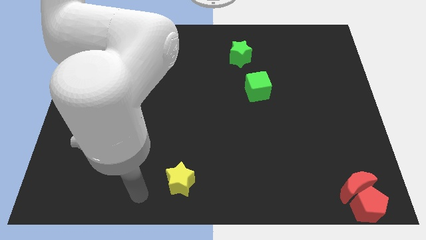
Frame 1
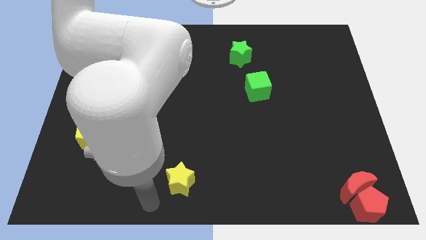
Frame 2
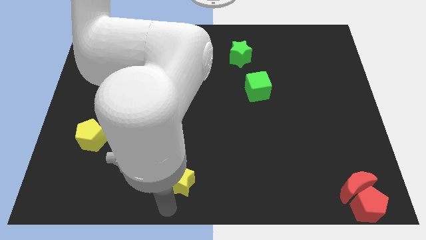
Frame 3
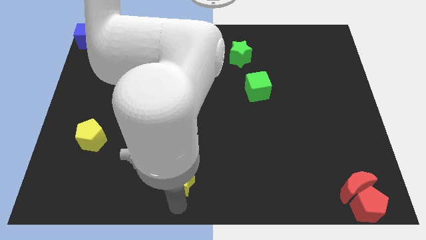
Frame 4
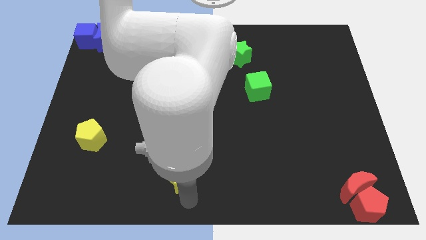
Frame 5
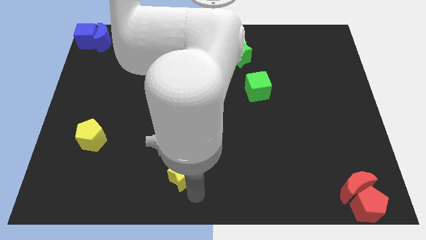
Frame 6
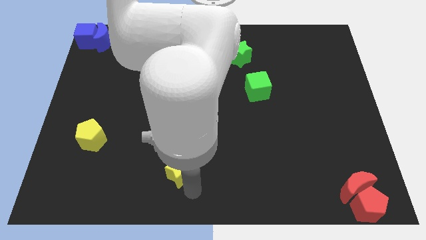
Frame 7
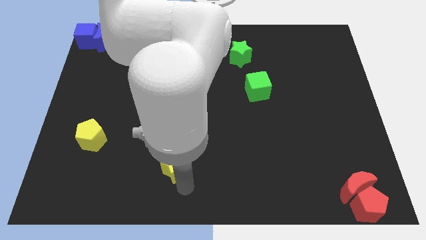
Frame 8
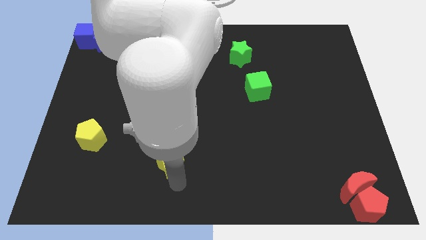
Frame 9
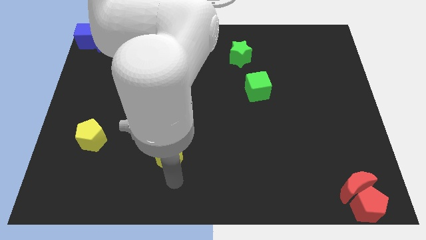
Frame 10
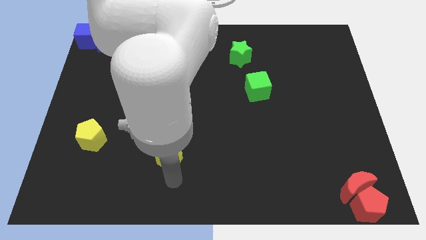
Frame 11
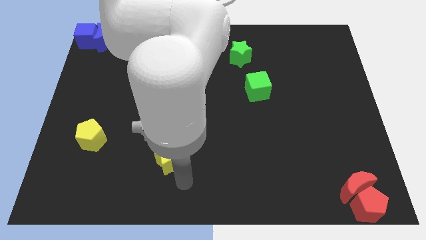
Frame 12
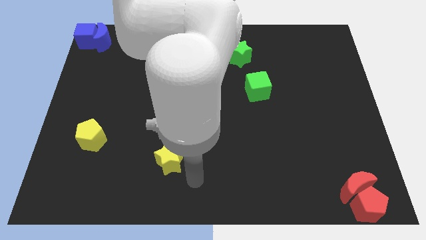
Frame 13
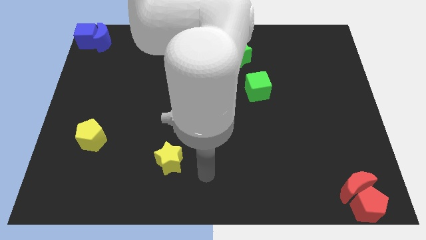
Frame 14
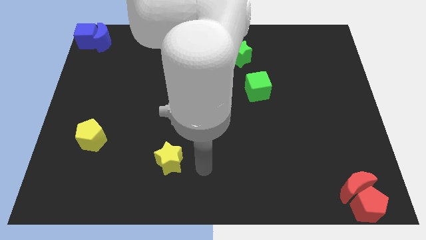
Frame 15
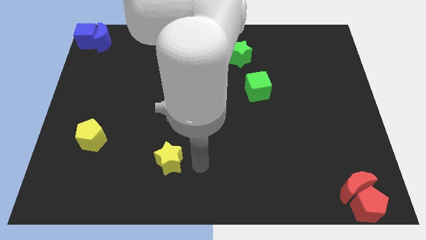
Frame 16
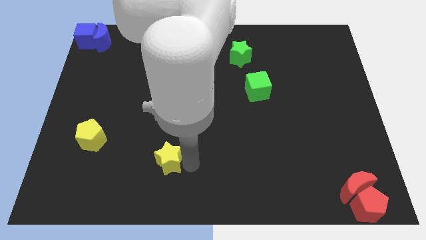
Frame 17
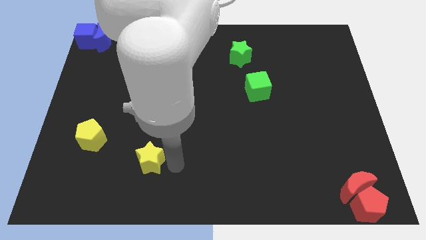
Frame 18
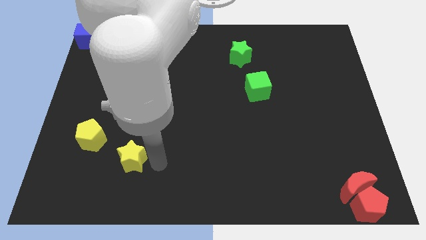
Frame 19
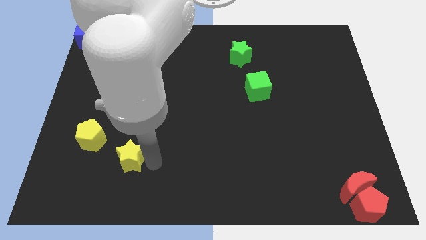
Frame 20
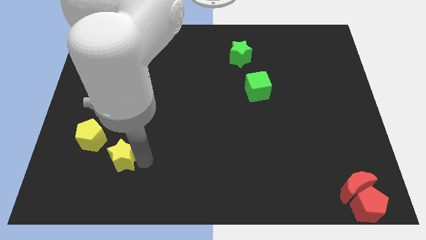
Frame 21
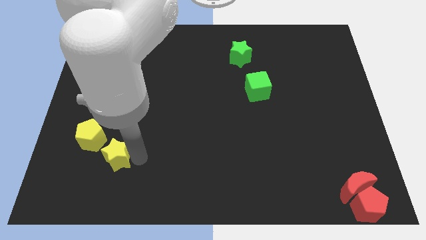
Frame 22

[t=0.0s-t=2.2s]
push the yellow star diagonally top left to the yellow pentagon

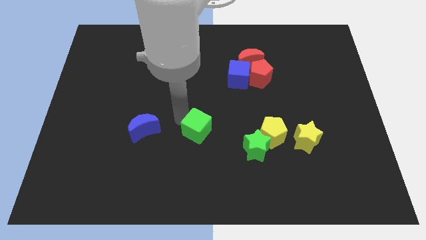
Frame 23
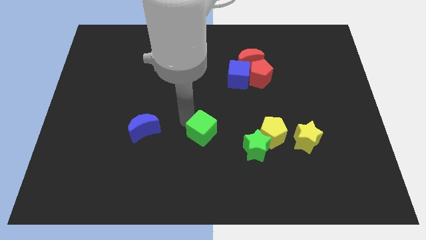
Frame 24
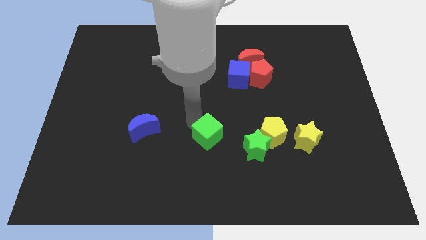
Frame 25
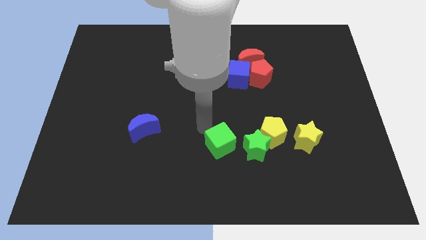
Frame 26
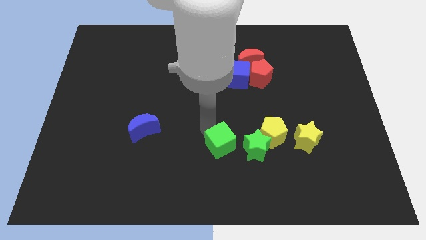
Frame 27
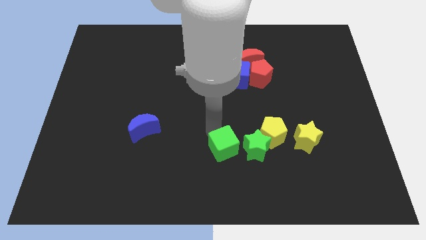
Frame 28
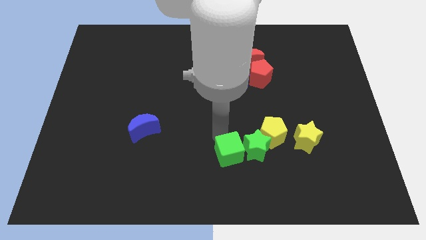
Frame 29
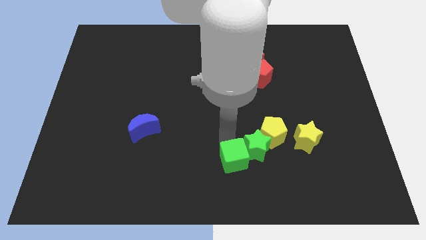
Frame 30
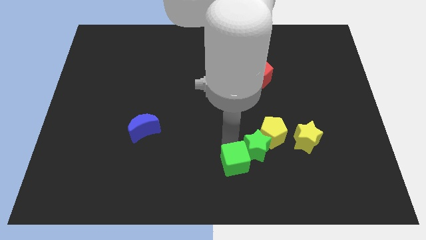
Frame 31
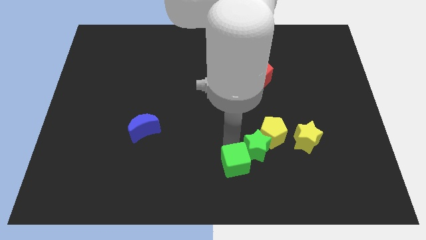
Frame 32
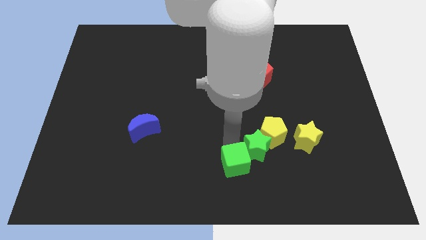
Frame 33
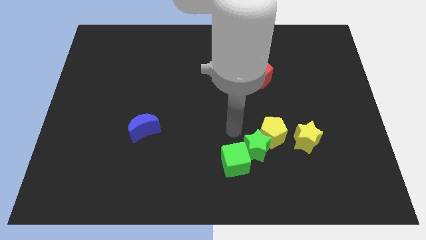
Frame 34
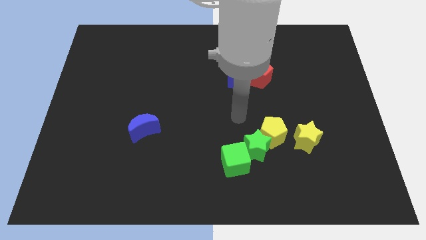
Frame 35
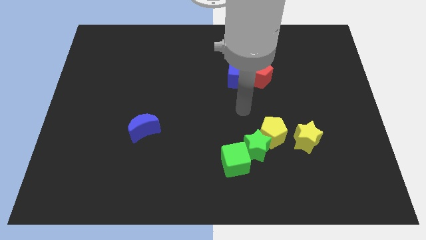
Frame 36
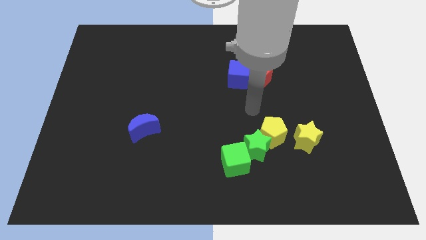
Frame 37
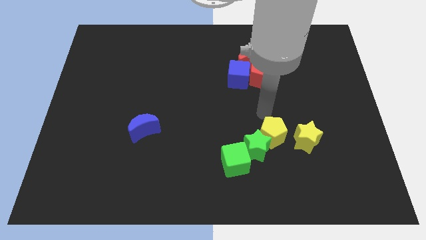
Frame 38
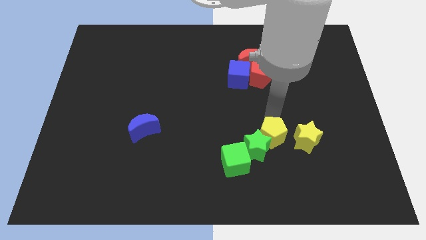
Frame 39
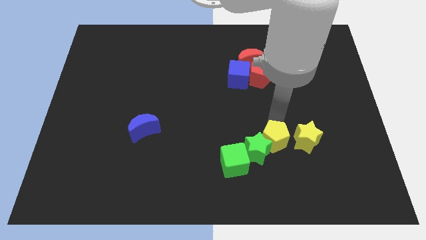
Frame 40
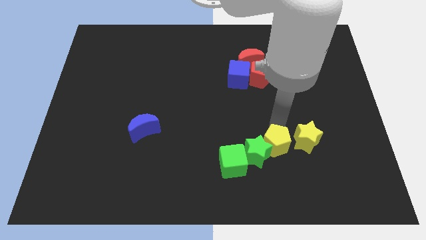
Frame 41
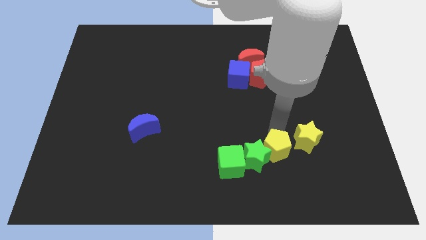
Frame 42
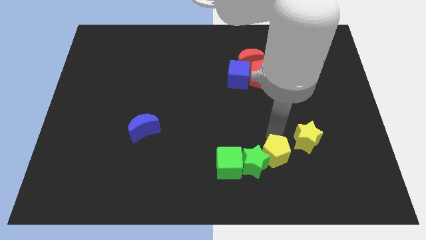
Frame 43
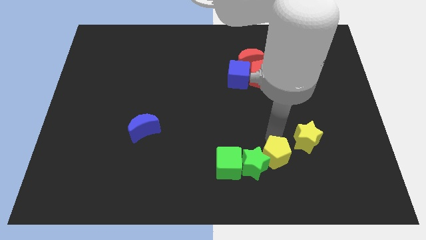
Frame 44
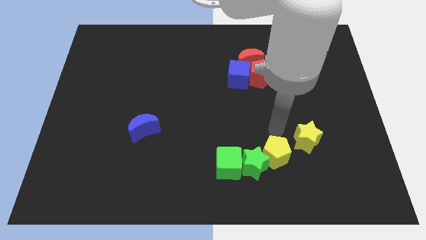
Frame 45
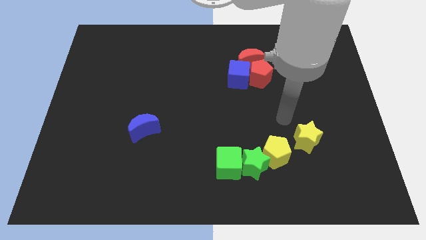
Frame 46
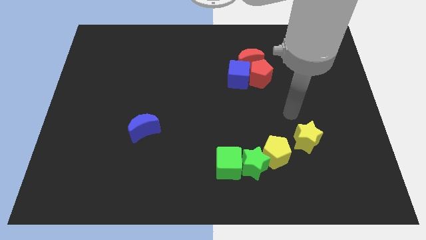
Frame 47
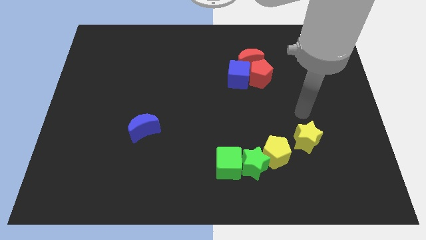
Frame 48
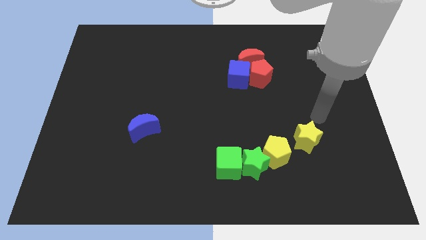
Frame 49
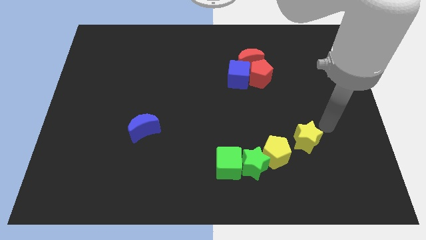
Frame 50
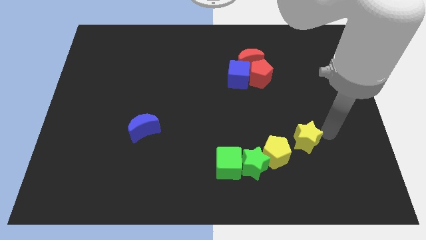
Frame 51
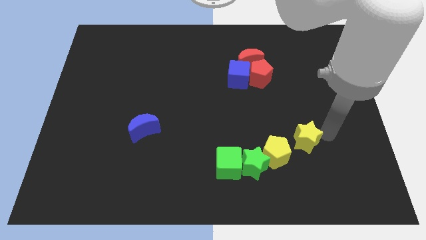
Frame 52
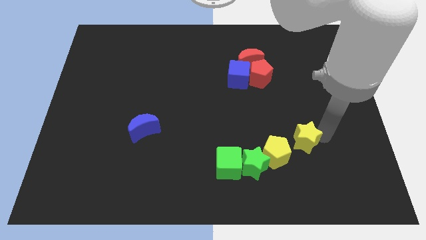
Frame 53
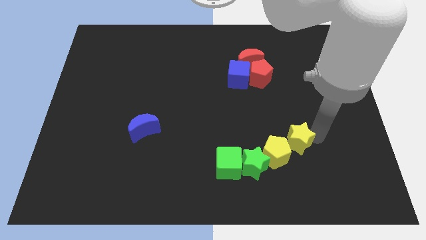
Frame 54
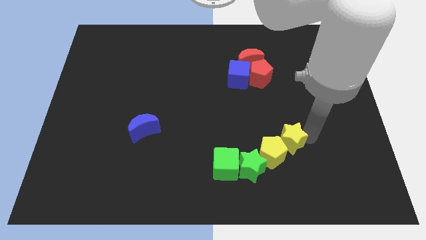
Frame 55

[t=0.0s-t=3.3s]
push the yellow pentagon into the green star

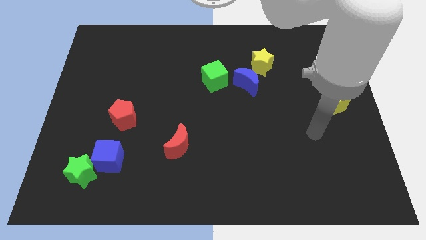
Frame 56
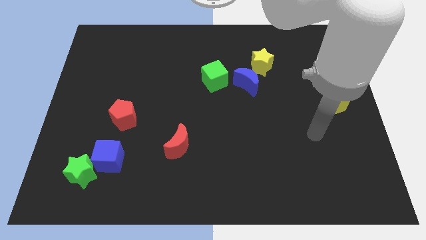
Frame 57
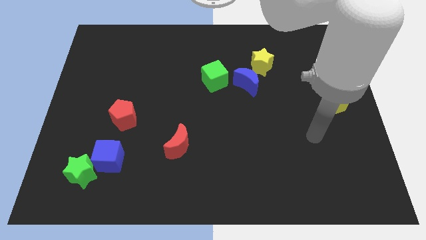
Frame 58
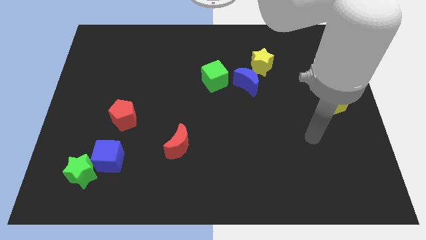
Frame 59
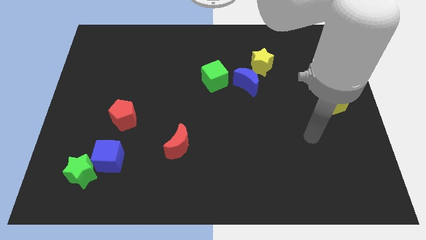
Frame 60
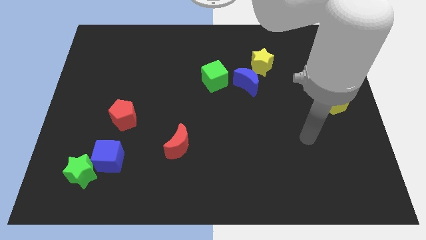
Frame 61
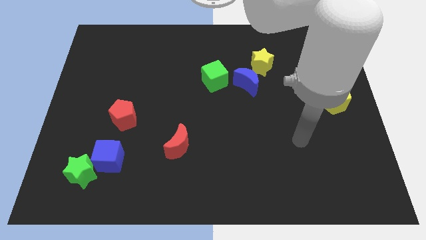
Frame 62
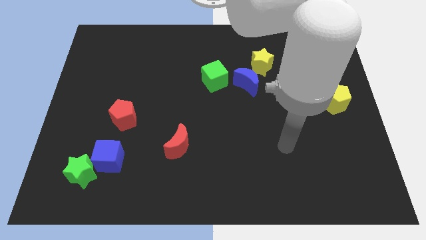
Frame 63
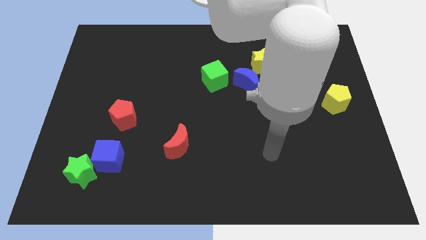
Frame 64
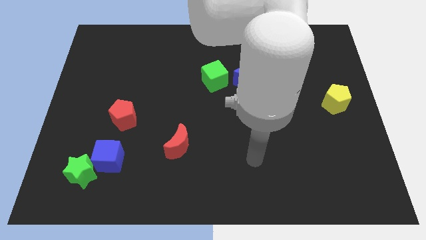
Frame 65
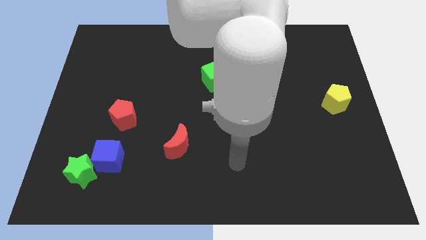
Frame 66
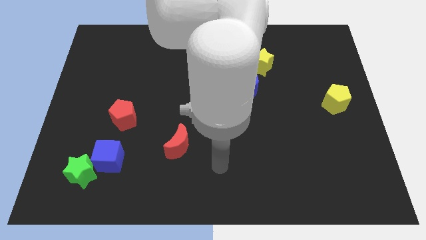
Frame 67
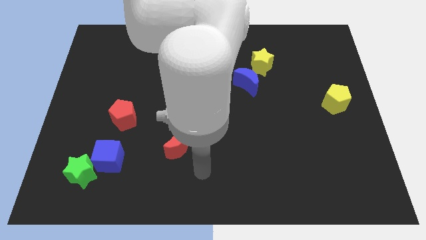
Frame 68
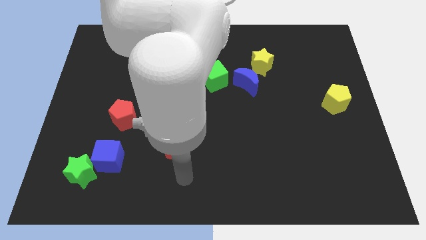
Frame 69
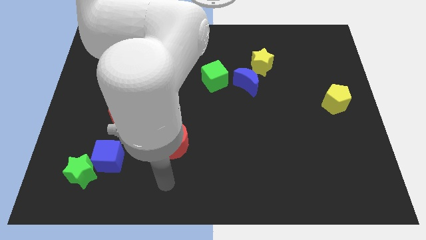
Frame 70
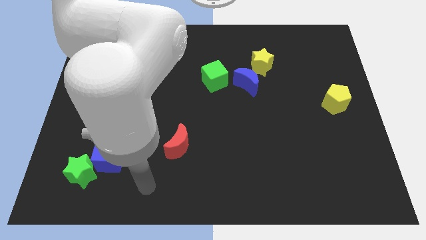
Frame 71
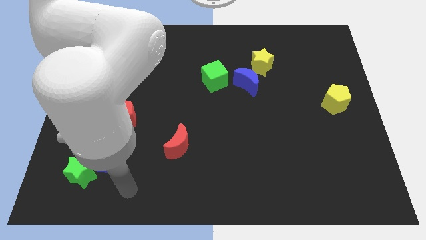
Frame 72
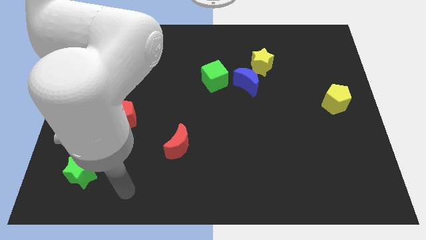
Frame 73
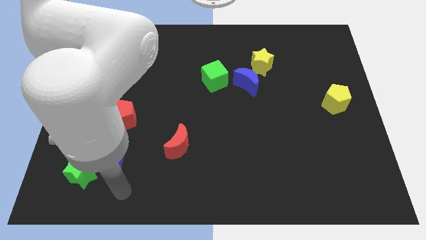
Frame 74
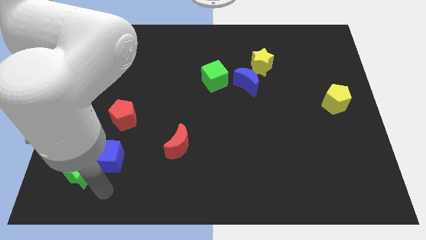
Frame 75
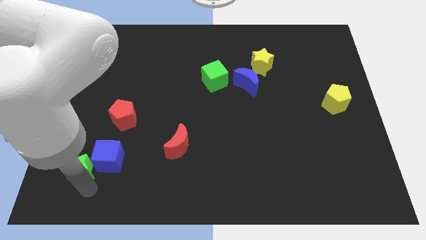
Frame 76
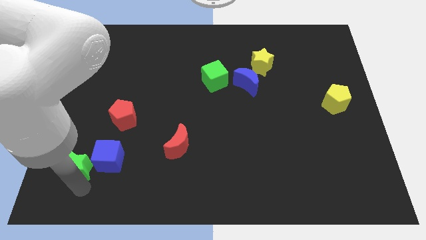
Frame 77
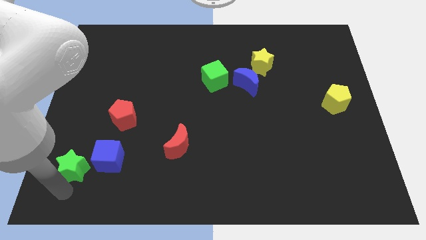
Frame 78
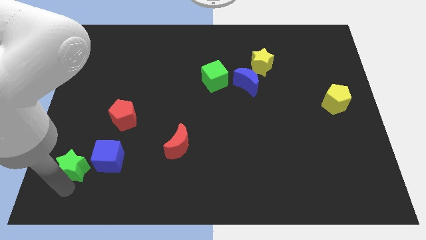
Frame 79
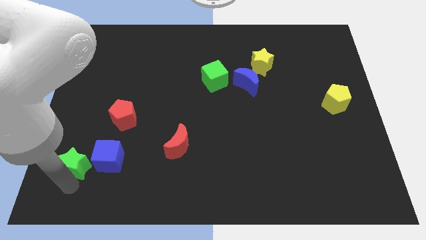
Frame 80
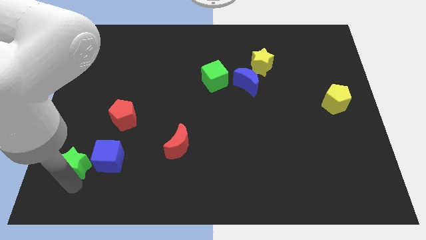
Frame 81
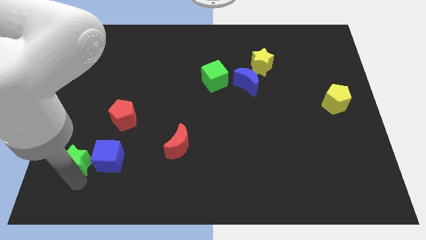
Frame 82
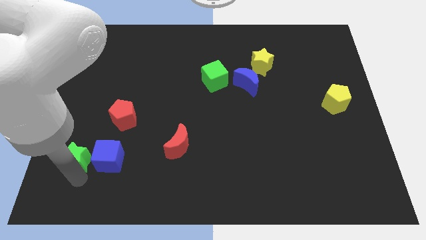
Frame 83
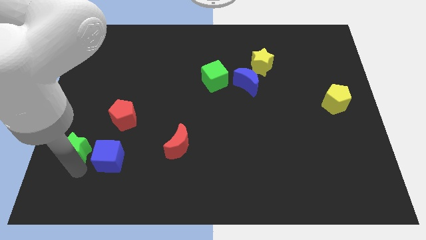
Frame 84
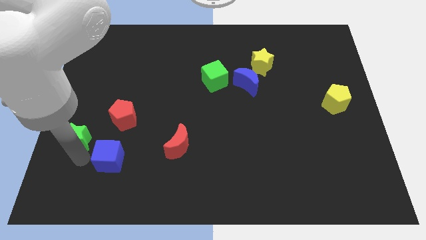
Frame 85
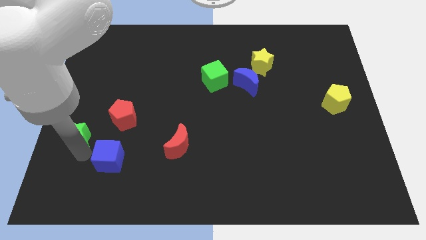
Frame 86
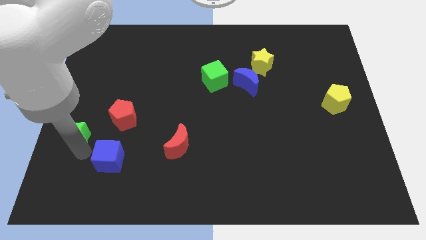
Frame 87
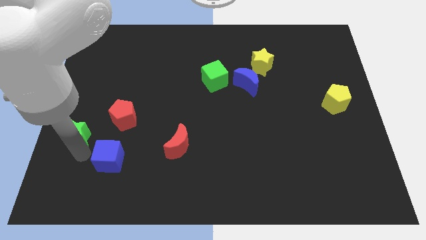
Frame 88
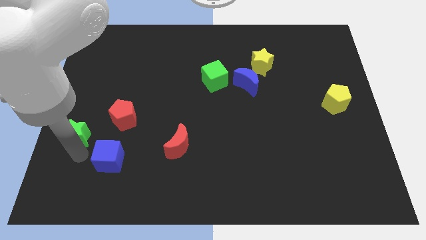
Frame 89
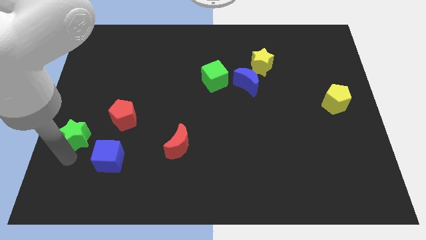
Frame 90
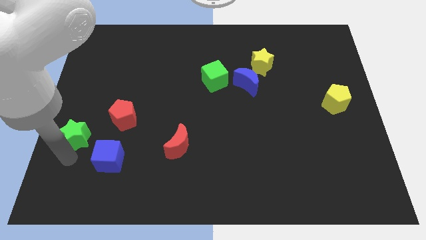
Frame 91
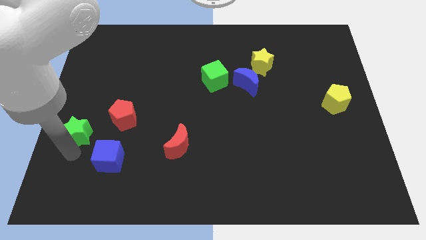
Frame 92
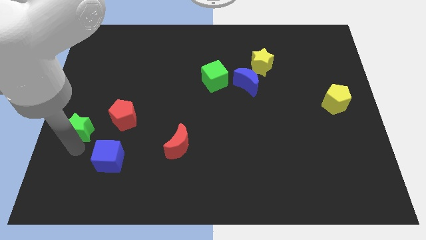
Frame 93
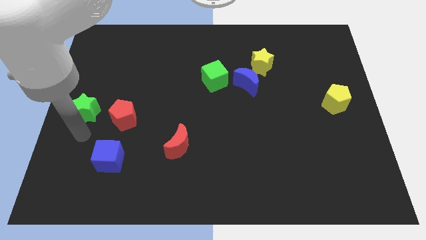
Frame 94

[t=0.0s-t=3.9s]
move the green star to the left side of the red pentagon
